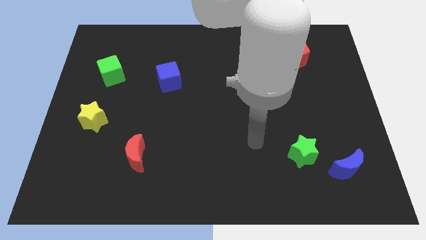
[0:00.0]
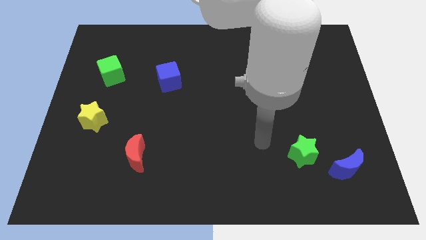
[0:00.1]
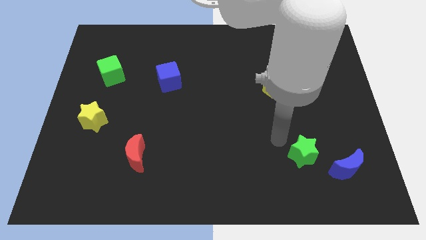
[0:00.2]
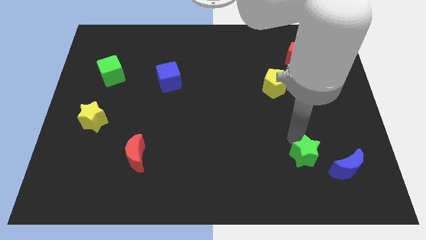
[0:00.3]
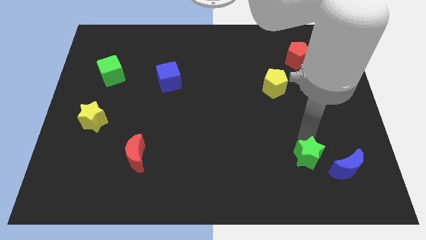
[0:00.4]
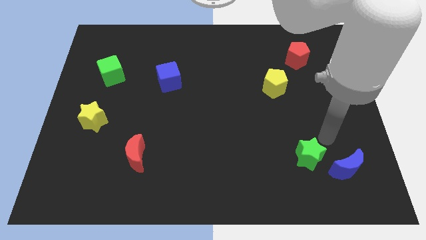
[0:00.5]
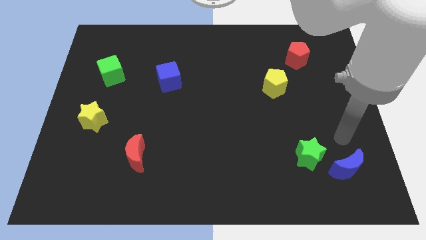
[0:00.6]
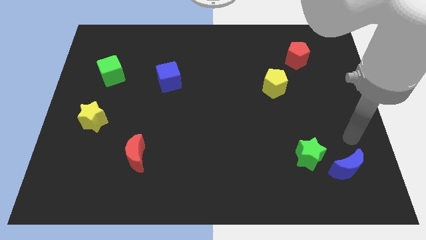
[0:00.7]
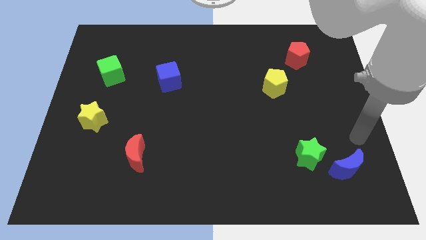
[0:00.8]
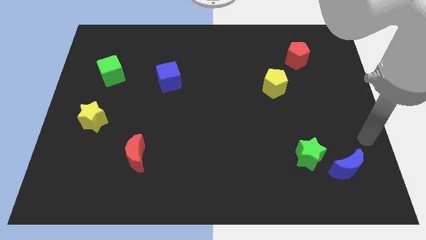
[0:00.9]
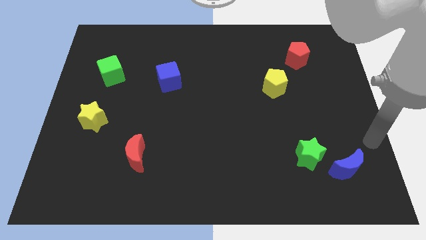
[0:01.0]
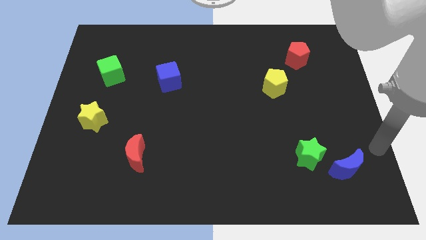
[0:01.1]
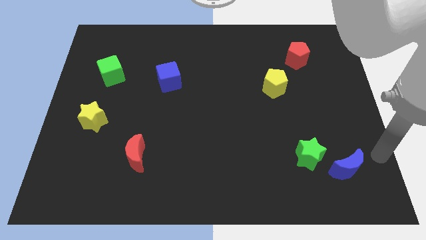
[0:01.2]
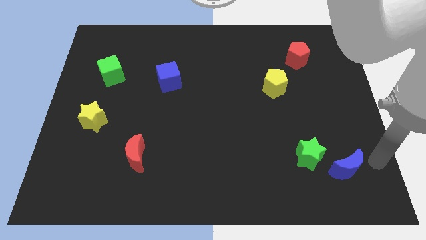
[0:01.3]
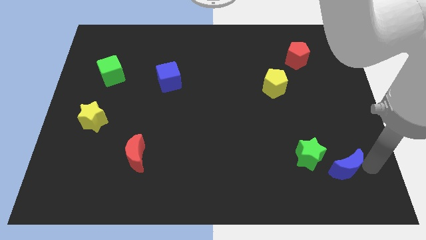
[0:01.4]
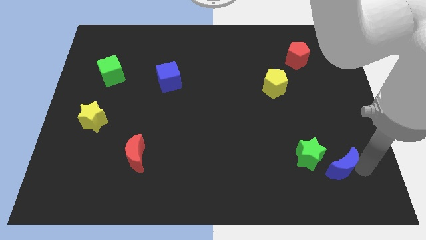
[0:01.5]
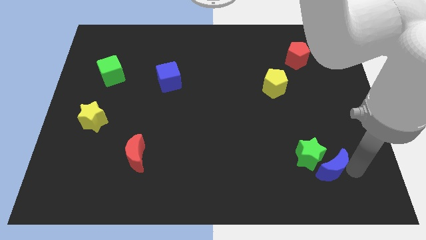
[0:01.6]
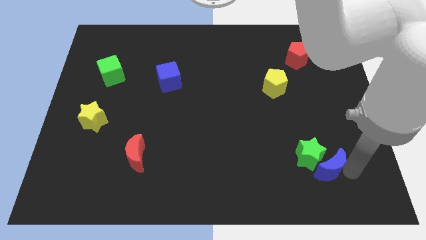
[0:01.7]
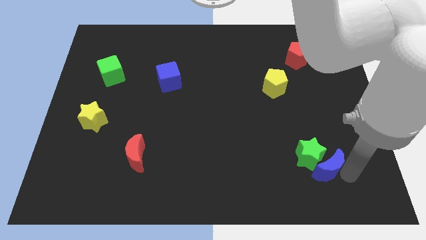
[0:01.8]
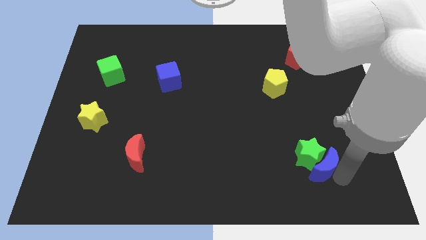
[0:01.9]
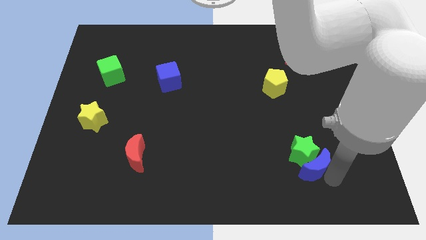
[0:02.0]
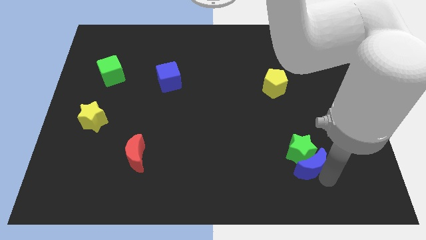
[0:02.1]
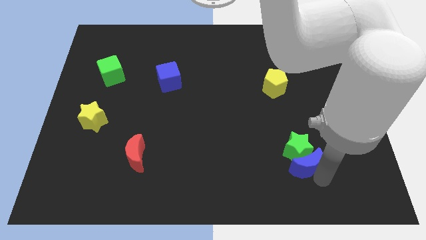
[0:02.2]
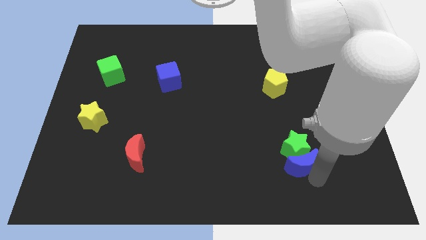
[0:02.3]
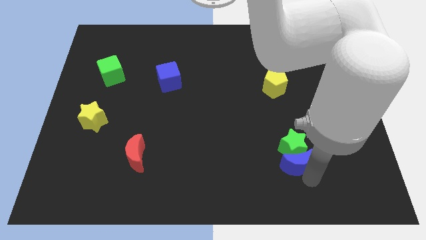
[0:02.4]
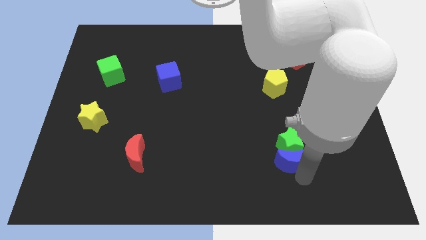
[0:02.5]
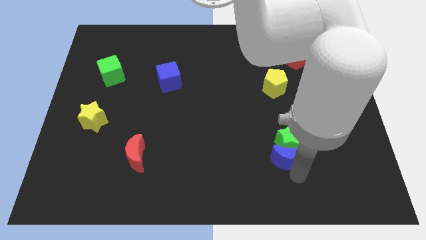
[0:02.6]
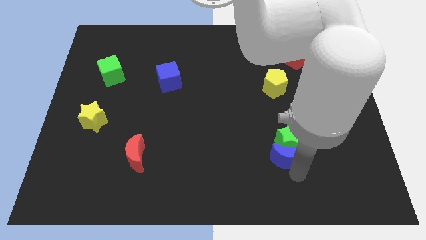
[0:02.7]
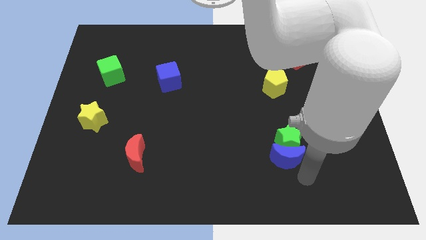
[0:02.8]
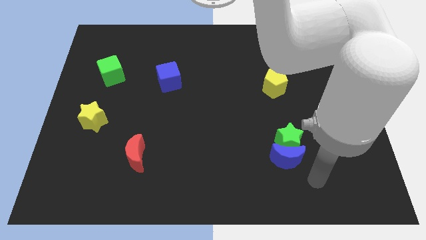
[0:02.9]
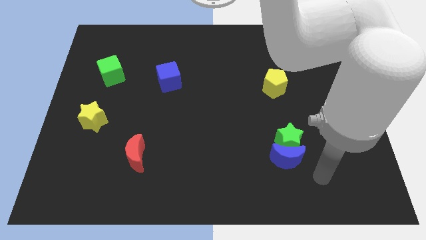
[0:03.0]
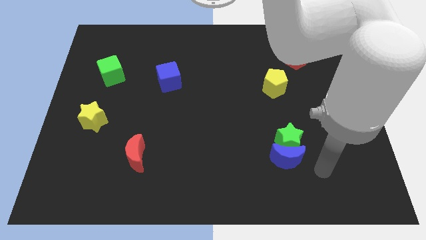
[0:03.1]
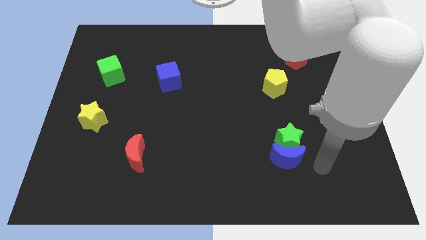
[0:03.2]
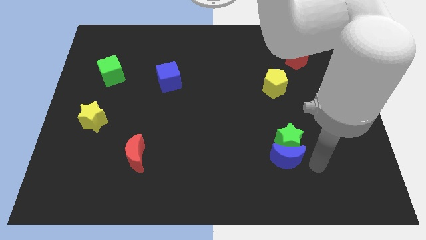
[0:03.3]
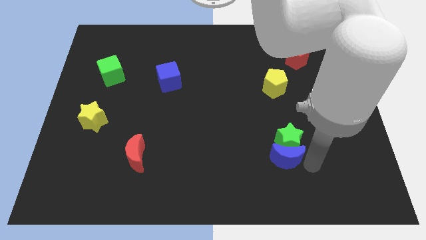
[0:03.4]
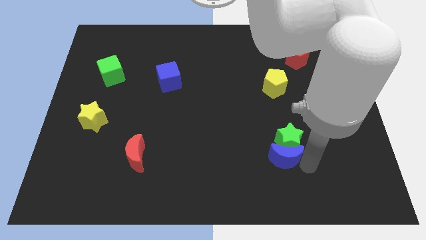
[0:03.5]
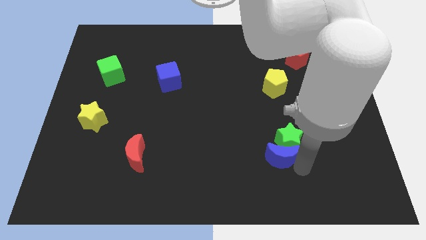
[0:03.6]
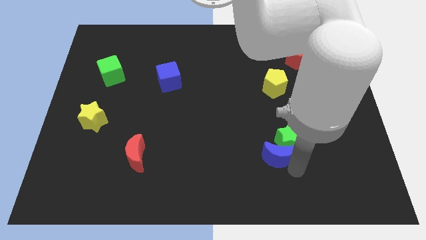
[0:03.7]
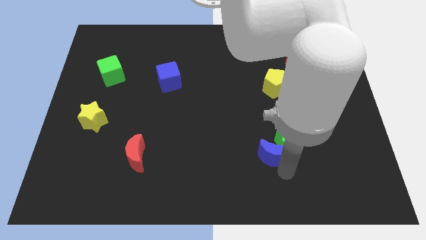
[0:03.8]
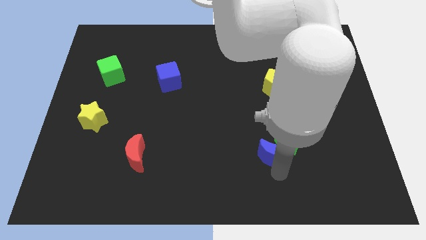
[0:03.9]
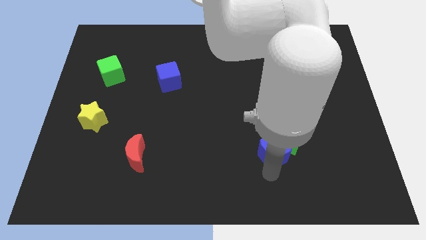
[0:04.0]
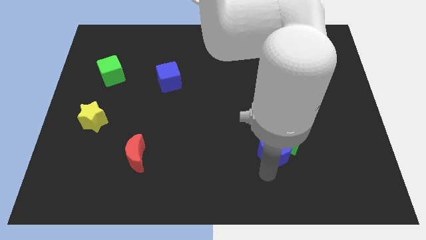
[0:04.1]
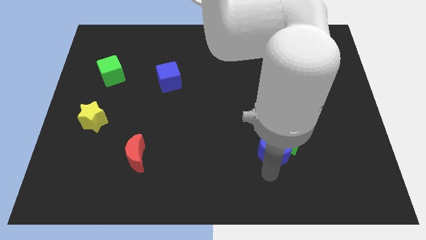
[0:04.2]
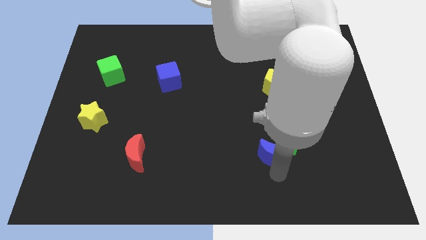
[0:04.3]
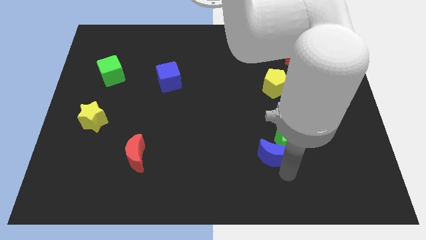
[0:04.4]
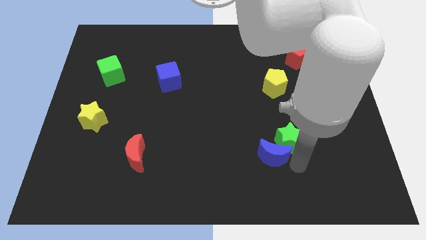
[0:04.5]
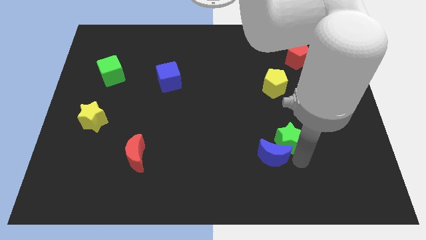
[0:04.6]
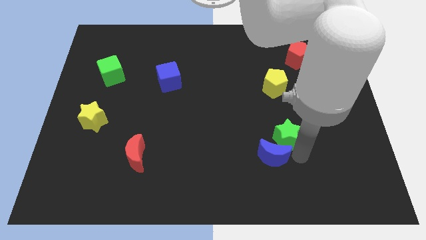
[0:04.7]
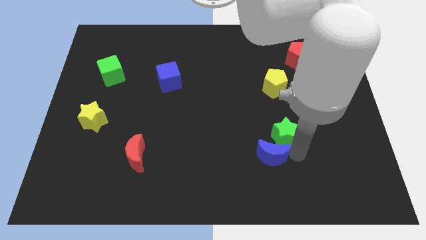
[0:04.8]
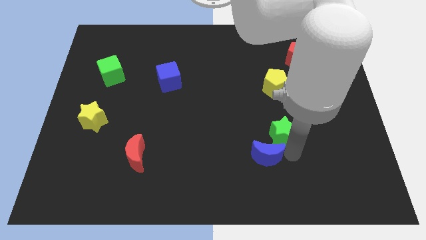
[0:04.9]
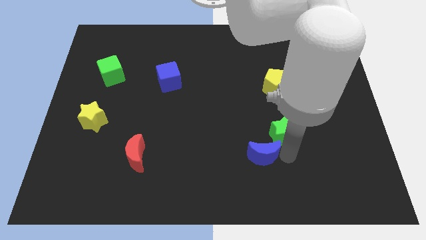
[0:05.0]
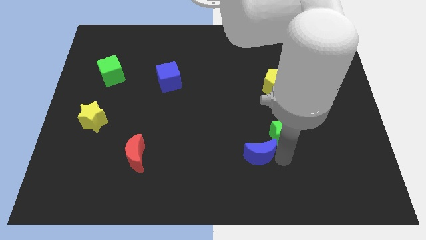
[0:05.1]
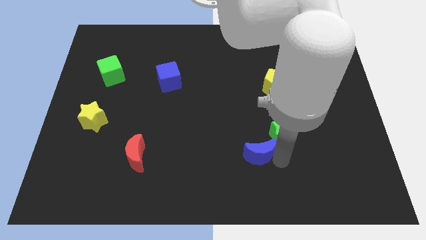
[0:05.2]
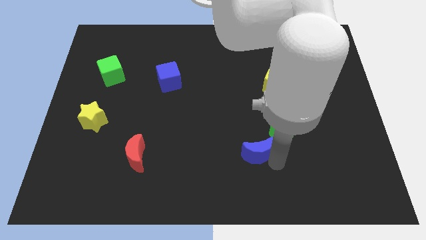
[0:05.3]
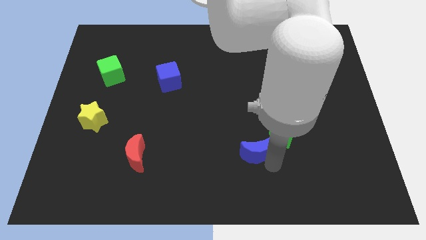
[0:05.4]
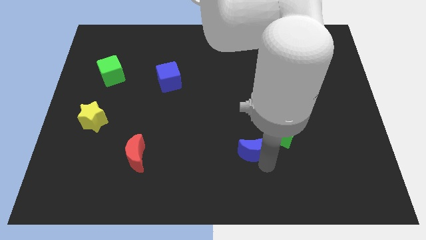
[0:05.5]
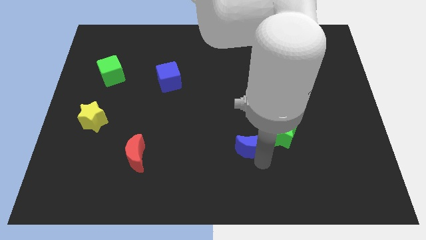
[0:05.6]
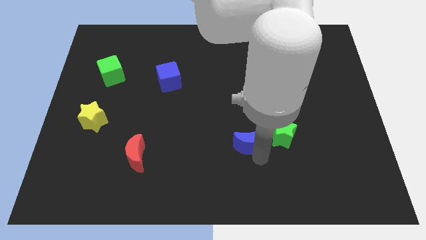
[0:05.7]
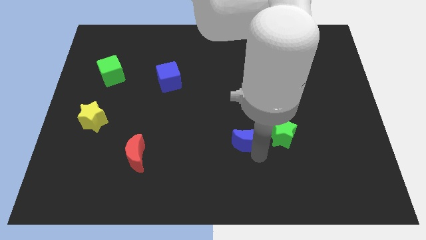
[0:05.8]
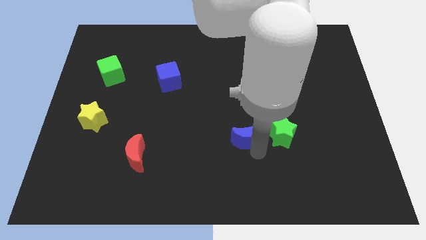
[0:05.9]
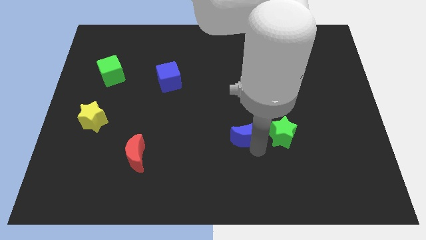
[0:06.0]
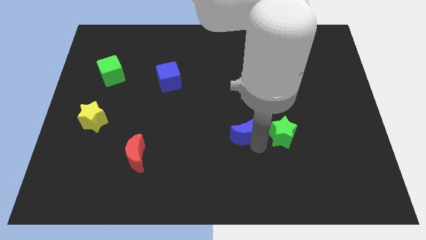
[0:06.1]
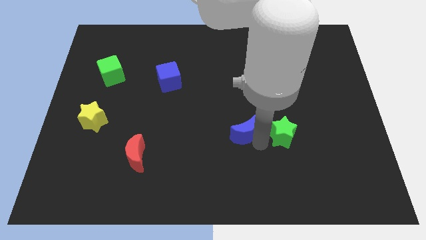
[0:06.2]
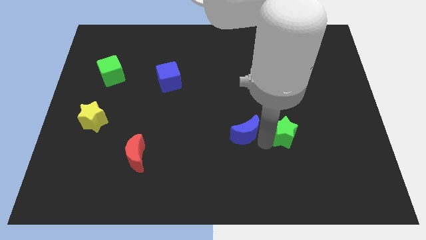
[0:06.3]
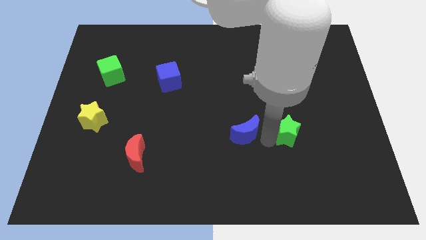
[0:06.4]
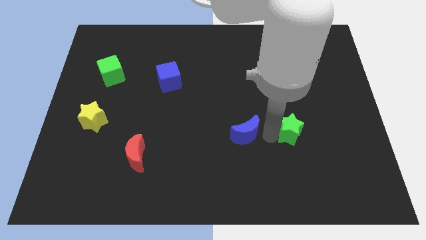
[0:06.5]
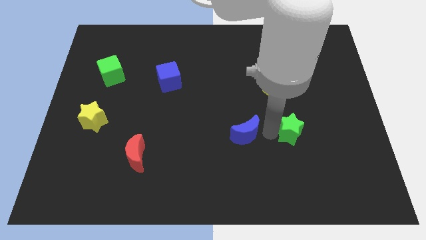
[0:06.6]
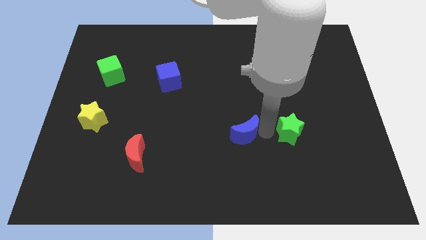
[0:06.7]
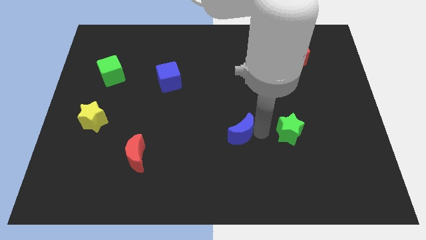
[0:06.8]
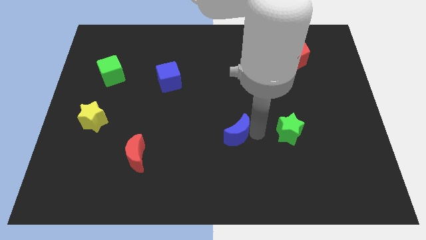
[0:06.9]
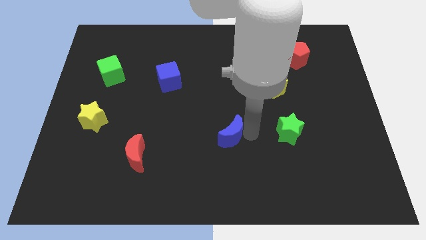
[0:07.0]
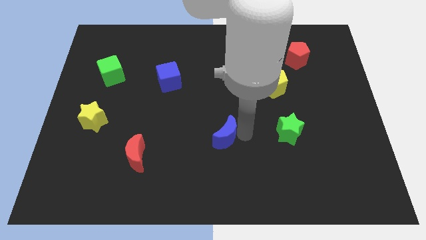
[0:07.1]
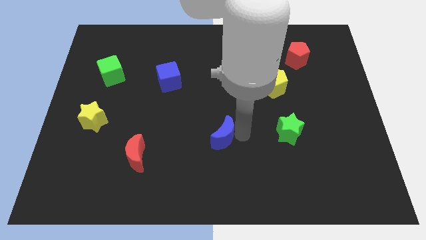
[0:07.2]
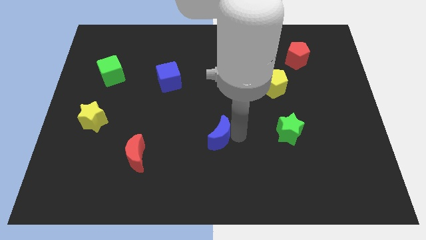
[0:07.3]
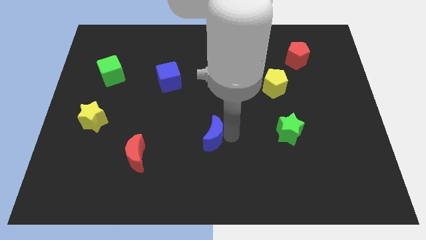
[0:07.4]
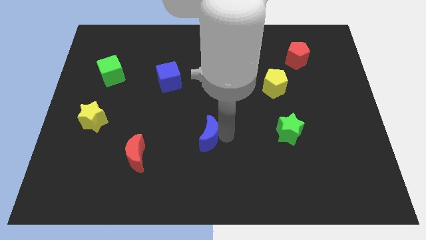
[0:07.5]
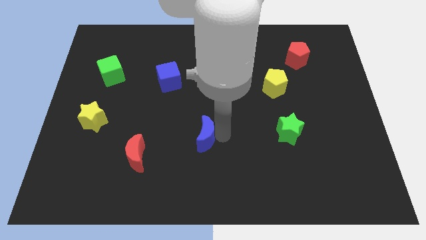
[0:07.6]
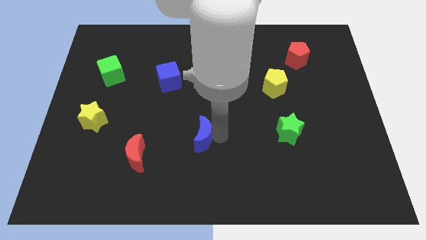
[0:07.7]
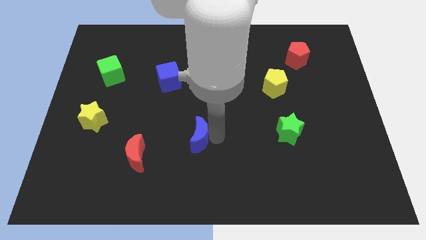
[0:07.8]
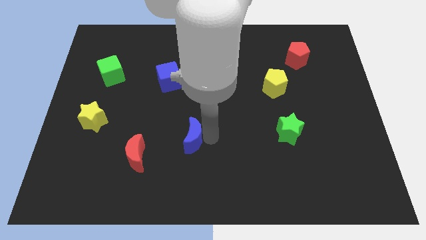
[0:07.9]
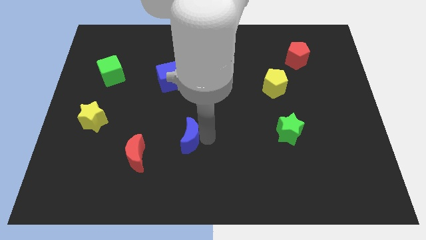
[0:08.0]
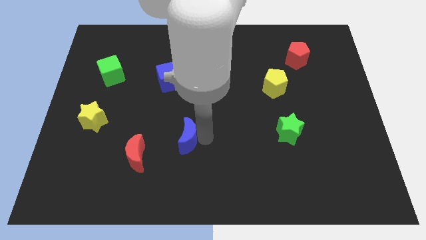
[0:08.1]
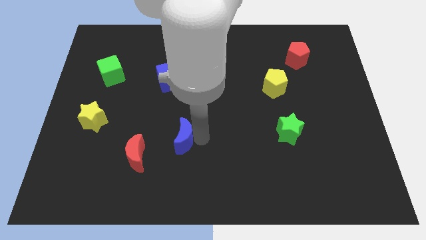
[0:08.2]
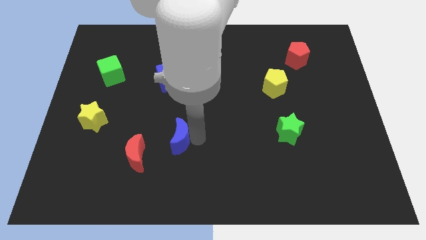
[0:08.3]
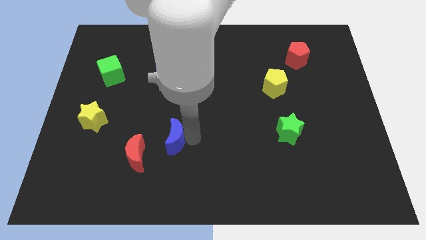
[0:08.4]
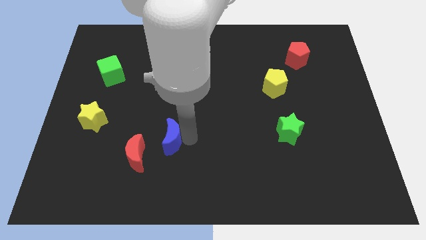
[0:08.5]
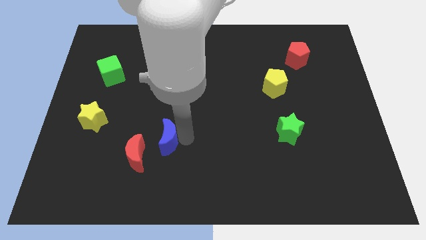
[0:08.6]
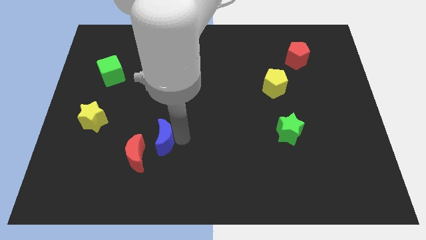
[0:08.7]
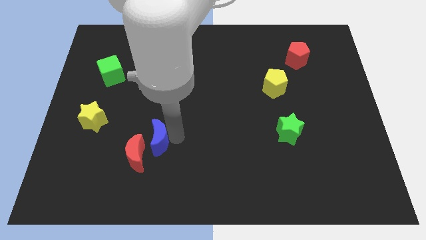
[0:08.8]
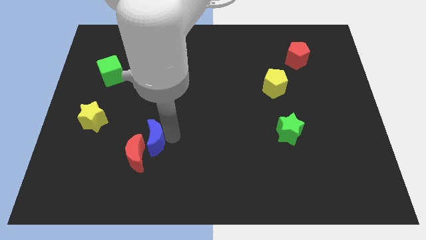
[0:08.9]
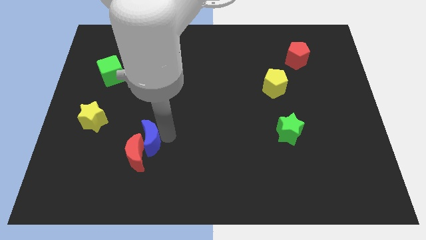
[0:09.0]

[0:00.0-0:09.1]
move the blue moon close to the red moon
